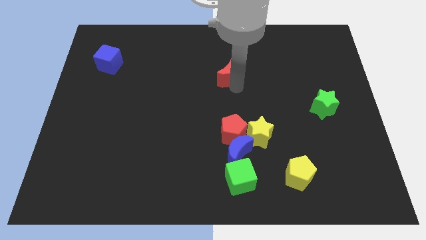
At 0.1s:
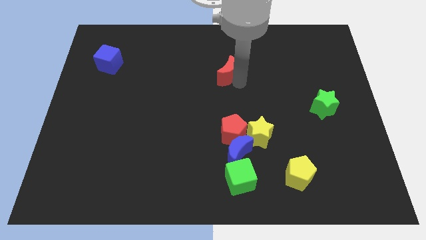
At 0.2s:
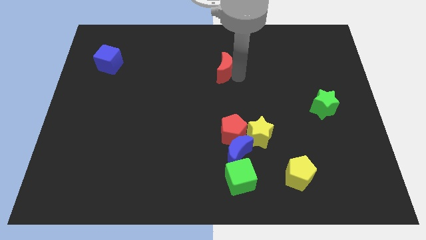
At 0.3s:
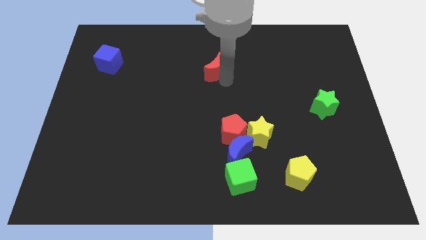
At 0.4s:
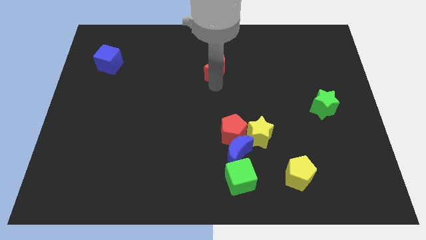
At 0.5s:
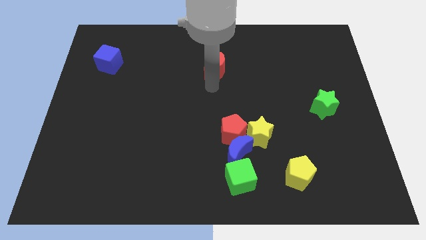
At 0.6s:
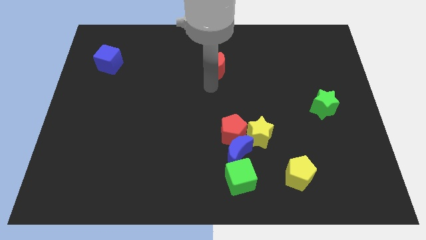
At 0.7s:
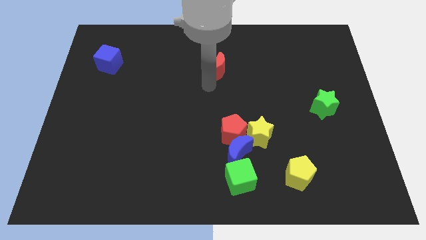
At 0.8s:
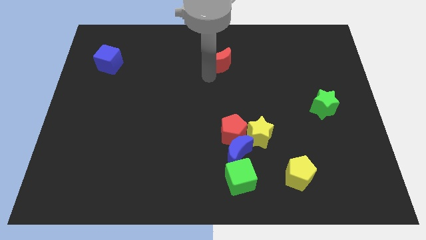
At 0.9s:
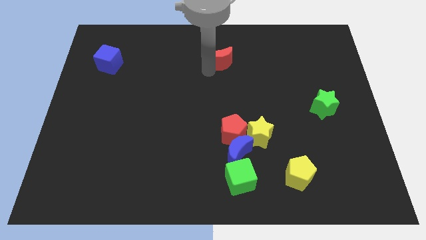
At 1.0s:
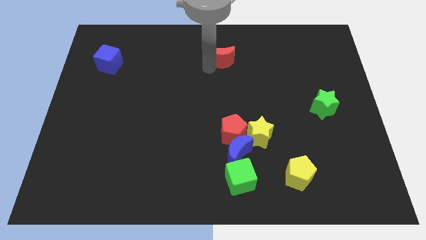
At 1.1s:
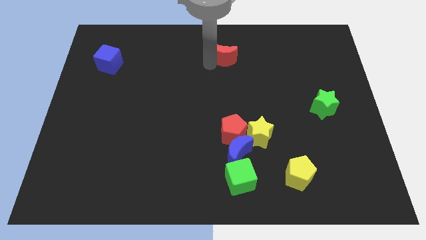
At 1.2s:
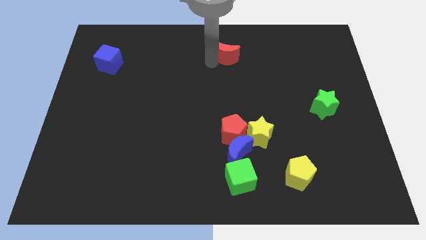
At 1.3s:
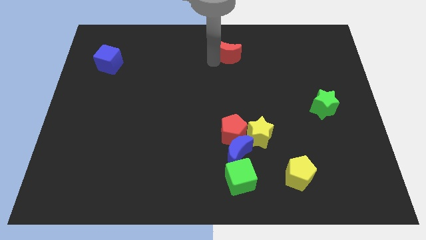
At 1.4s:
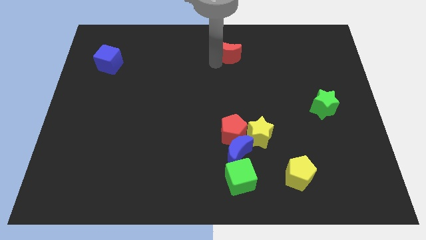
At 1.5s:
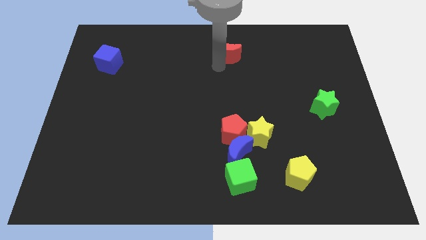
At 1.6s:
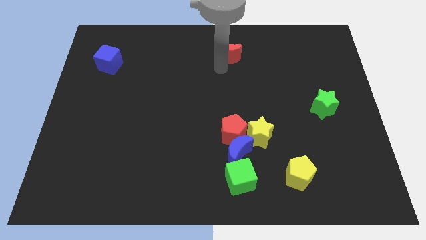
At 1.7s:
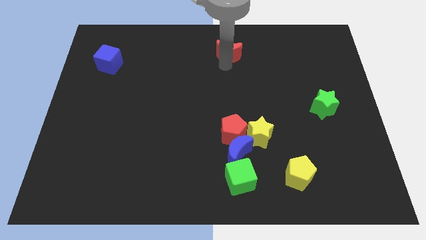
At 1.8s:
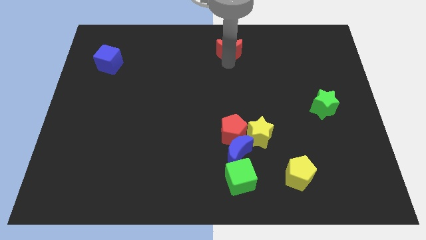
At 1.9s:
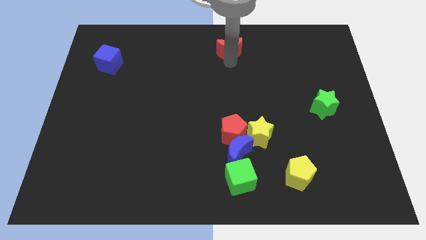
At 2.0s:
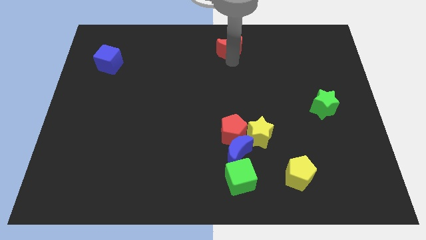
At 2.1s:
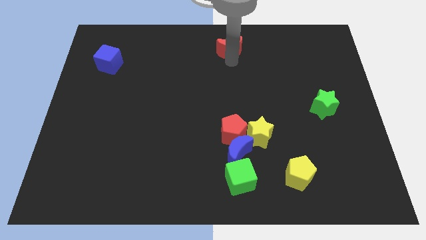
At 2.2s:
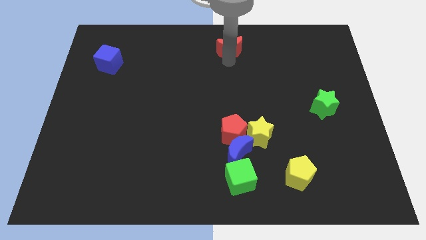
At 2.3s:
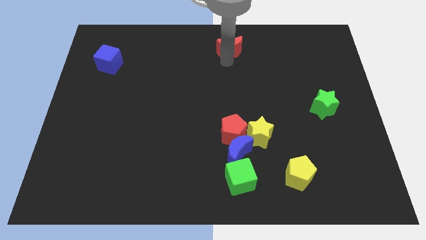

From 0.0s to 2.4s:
push red crescent towards top center of the board

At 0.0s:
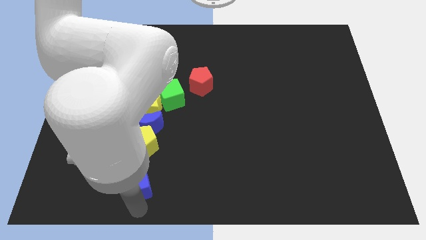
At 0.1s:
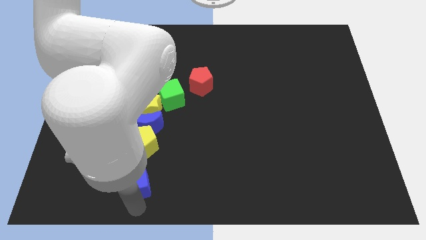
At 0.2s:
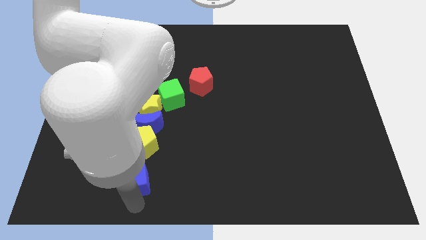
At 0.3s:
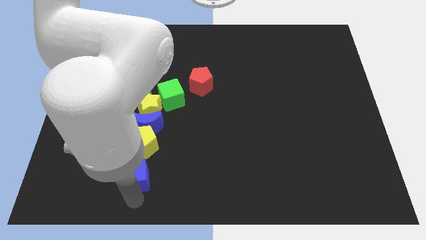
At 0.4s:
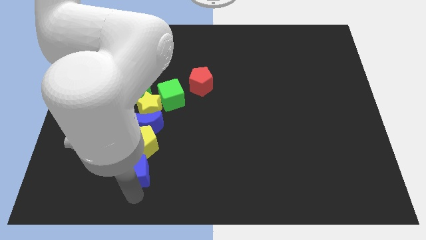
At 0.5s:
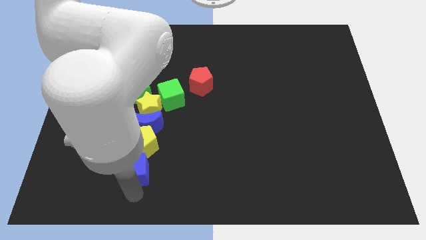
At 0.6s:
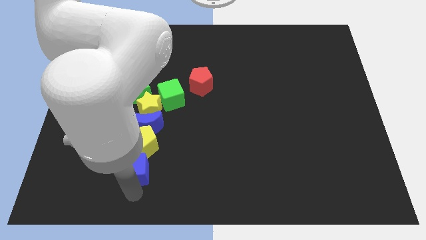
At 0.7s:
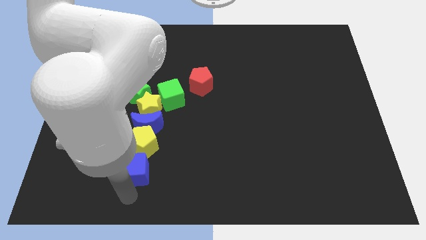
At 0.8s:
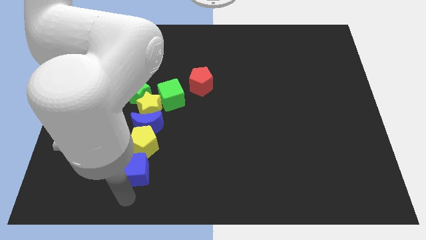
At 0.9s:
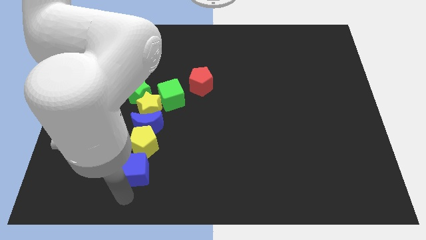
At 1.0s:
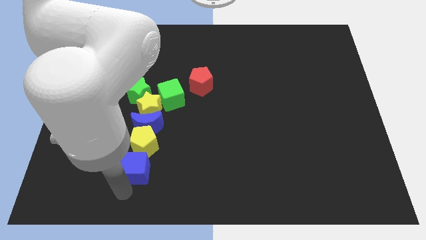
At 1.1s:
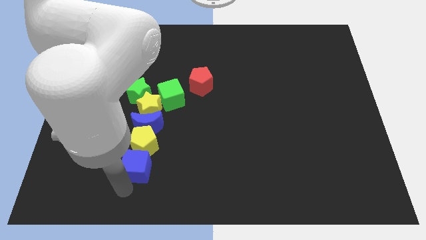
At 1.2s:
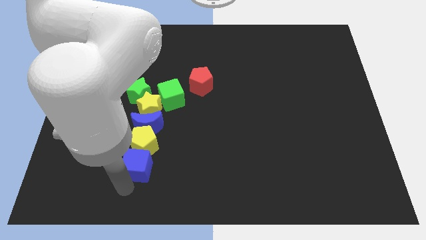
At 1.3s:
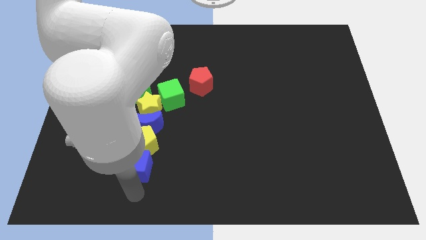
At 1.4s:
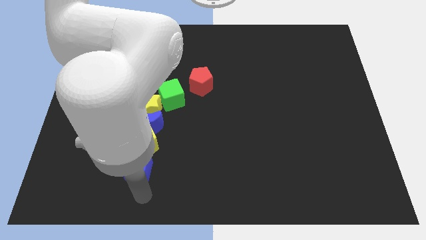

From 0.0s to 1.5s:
move the blue cube to the bottom side of the yellow pentagon

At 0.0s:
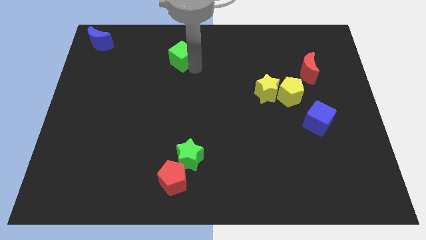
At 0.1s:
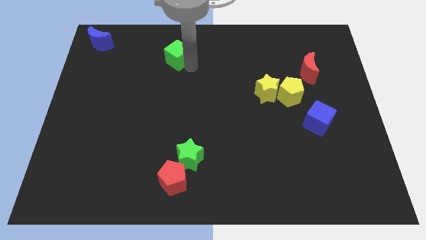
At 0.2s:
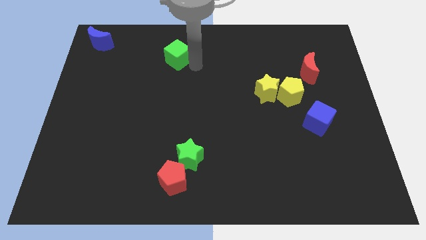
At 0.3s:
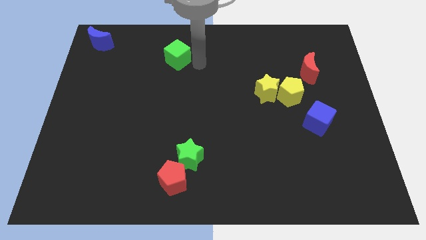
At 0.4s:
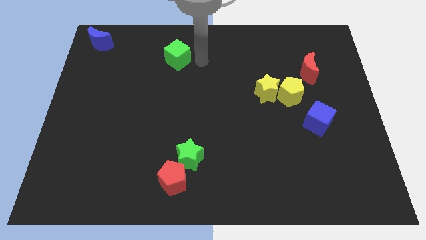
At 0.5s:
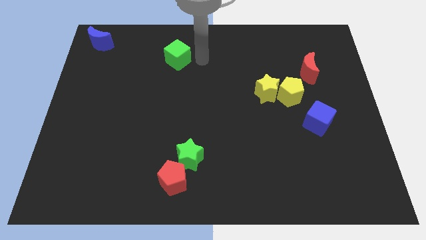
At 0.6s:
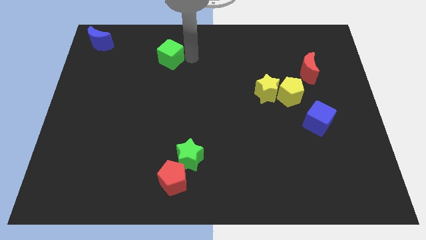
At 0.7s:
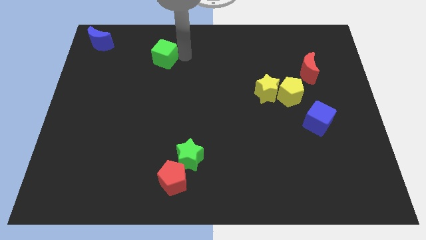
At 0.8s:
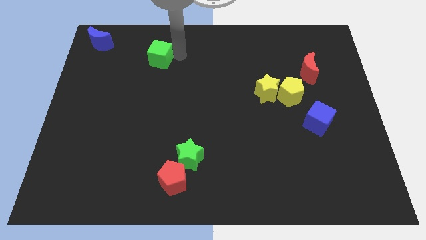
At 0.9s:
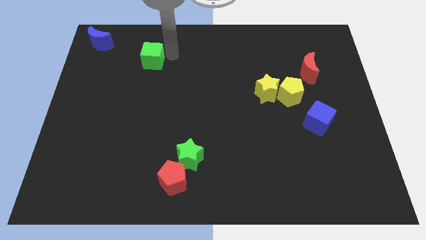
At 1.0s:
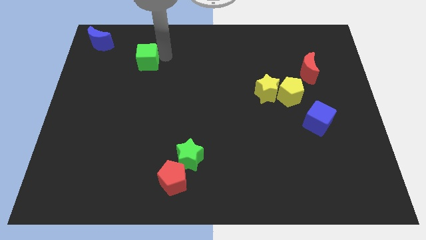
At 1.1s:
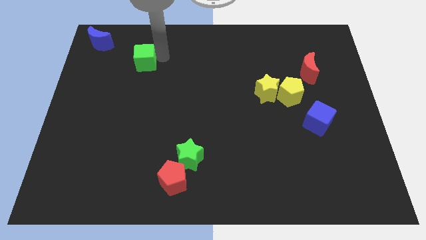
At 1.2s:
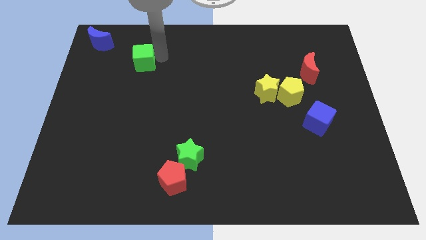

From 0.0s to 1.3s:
move green cube towards blue moon

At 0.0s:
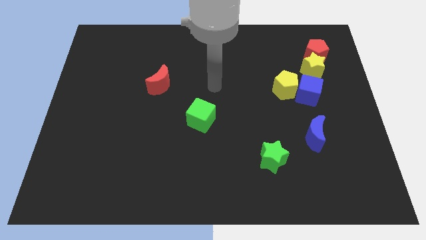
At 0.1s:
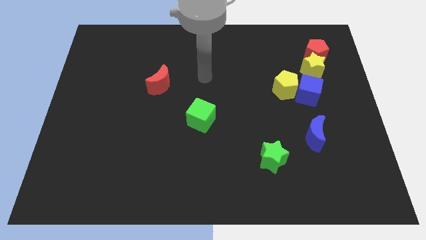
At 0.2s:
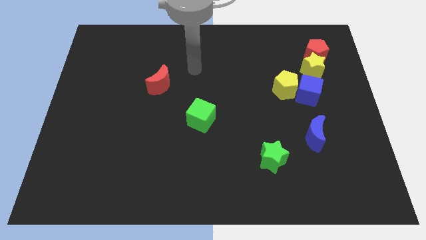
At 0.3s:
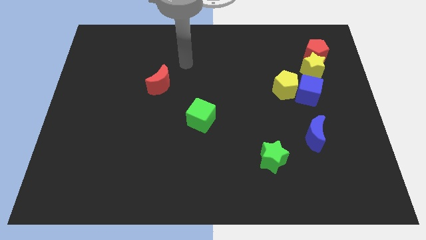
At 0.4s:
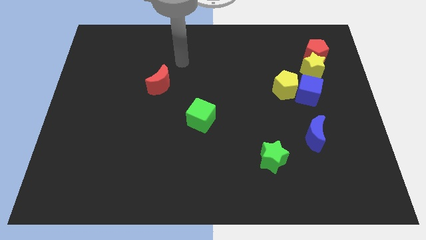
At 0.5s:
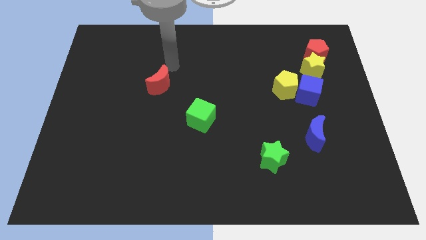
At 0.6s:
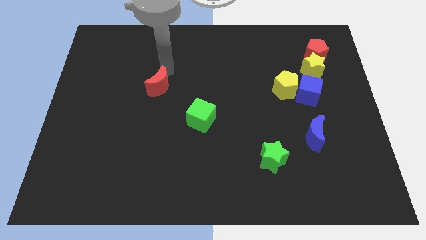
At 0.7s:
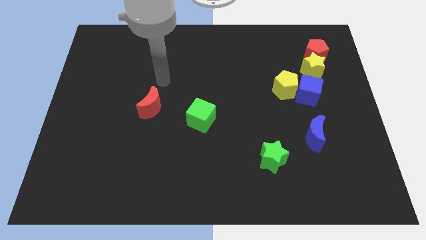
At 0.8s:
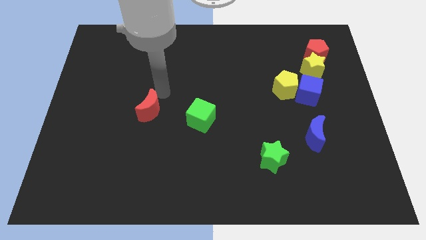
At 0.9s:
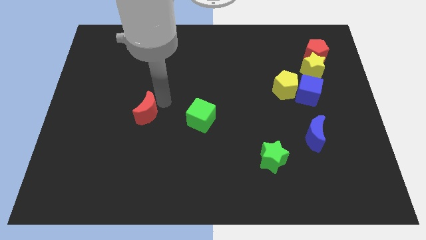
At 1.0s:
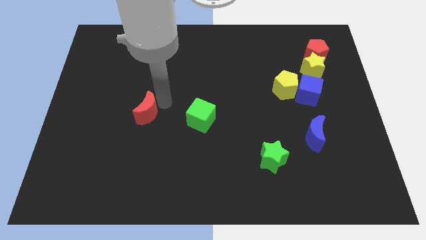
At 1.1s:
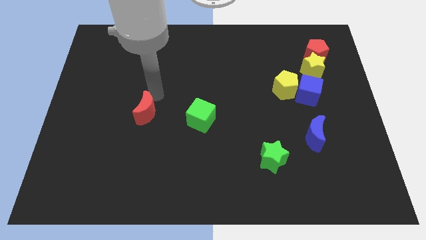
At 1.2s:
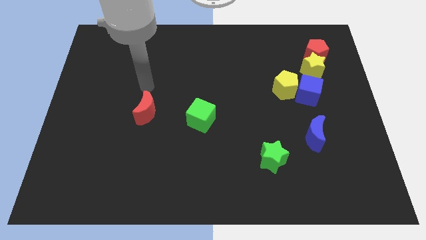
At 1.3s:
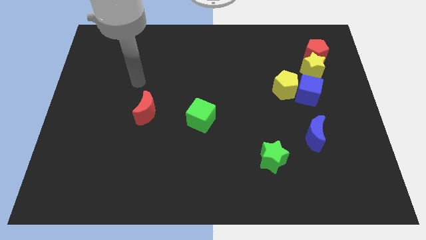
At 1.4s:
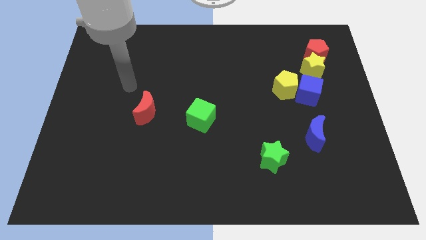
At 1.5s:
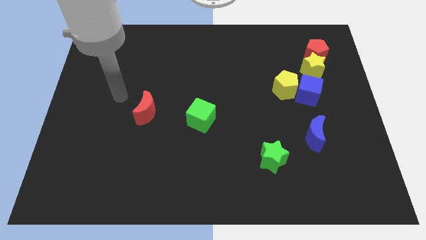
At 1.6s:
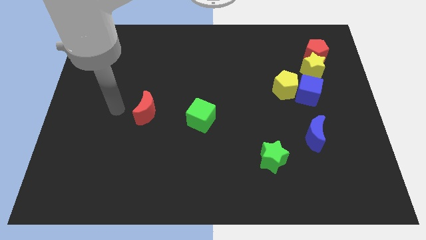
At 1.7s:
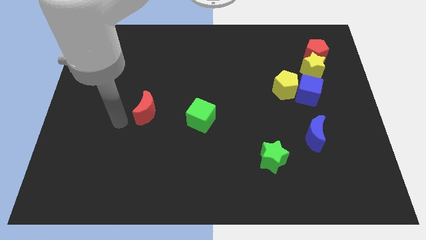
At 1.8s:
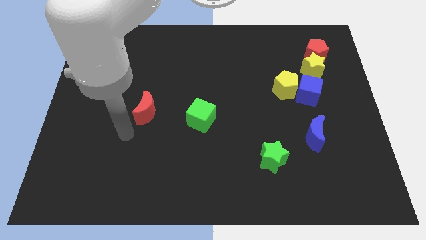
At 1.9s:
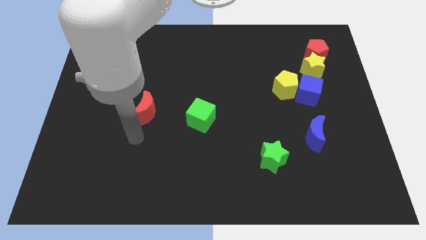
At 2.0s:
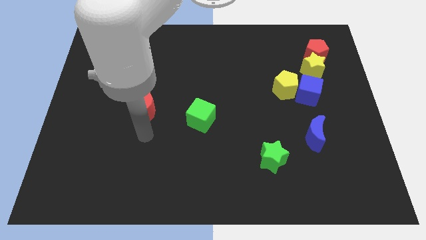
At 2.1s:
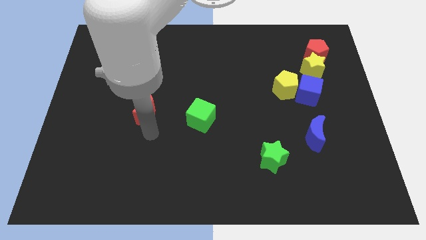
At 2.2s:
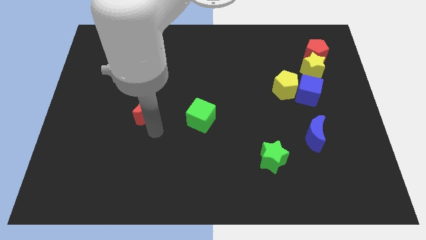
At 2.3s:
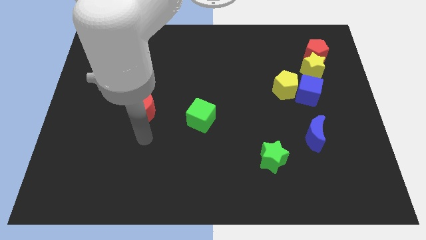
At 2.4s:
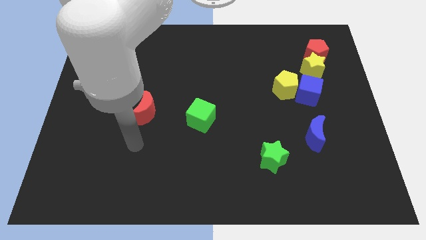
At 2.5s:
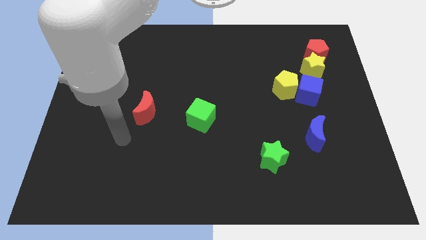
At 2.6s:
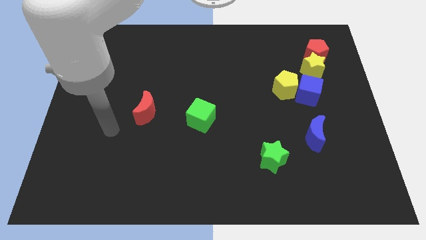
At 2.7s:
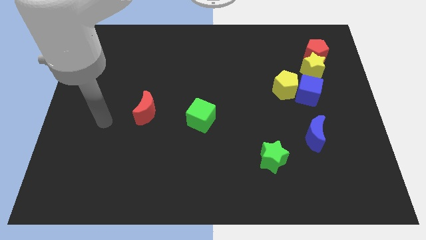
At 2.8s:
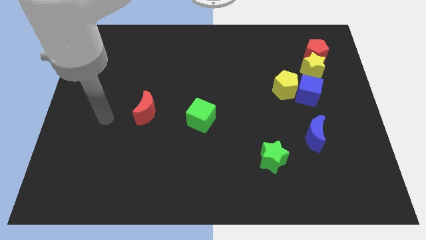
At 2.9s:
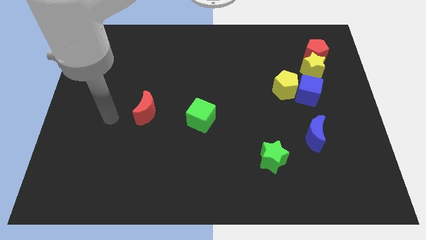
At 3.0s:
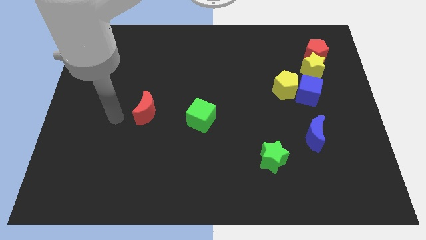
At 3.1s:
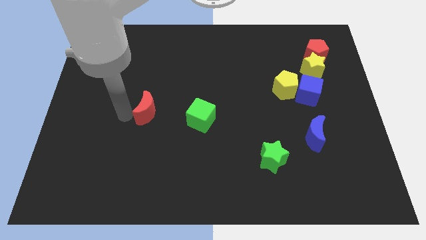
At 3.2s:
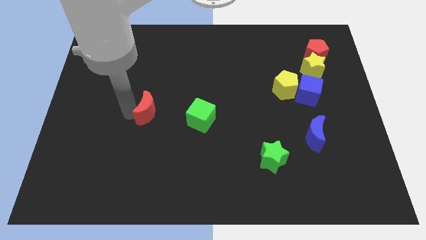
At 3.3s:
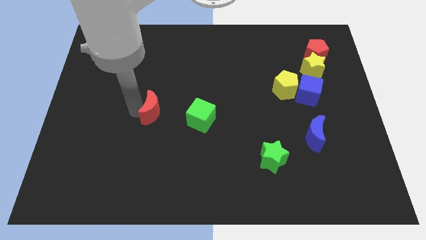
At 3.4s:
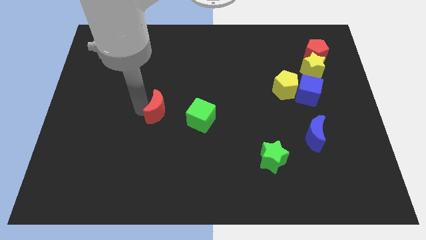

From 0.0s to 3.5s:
push the red moon to the left side of the green cube

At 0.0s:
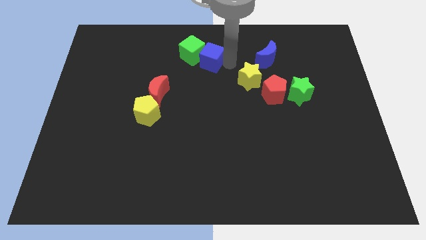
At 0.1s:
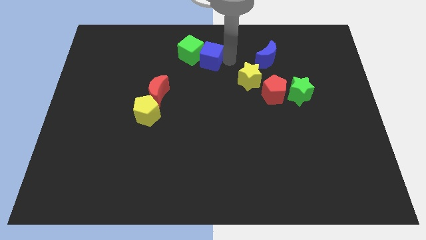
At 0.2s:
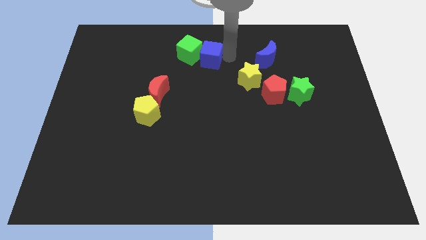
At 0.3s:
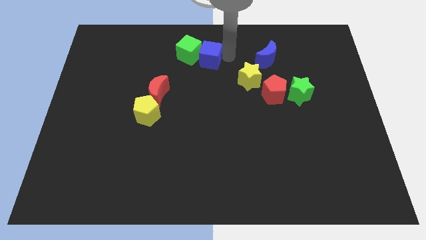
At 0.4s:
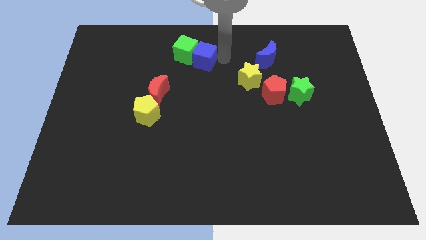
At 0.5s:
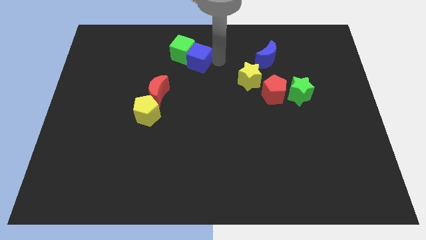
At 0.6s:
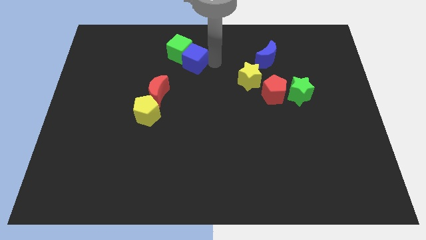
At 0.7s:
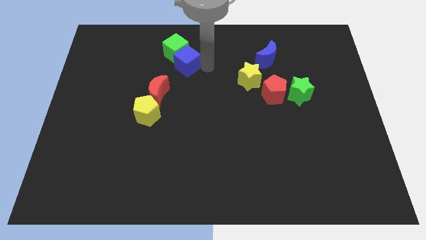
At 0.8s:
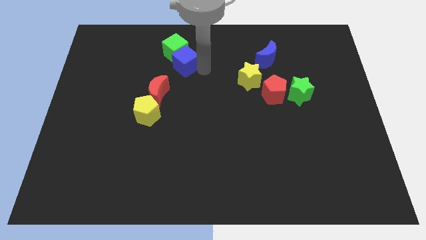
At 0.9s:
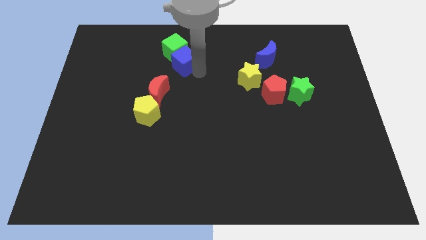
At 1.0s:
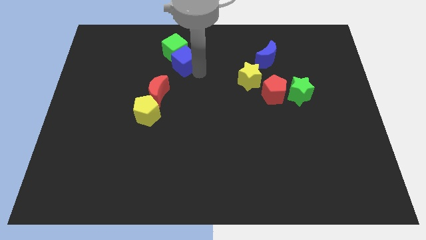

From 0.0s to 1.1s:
push the blue cube and green cube towards the red crescent
